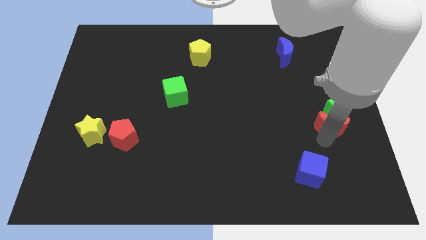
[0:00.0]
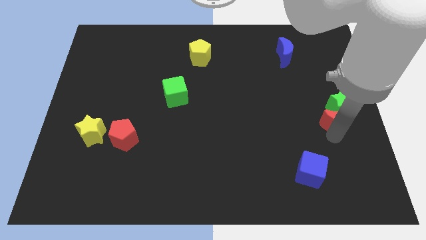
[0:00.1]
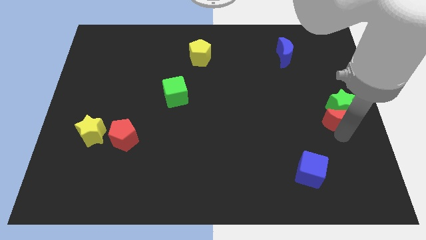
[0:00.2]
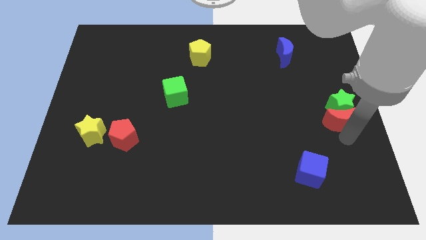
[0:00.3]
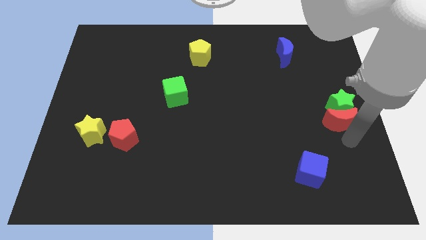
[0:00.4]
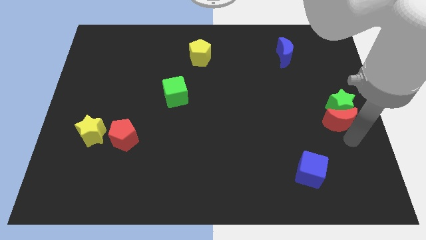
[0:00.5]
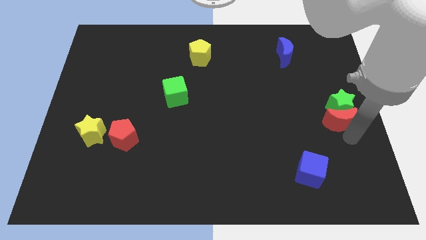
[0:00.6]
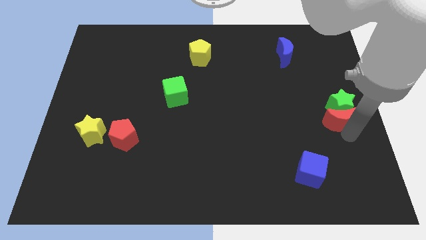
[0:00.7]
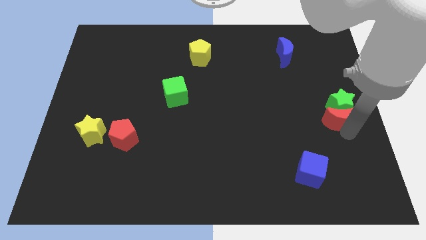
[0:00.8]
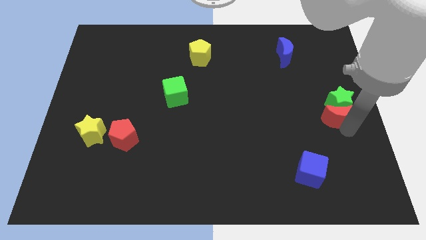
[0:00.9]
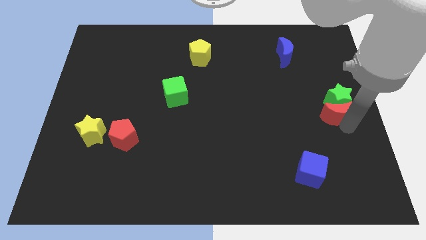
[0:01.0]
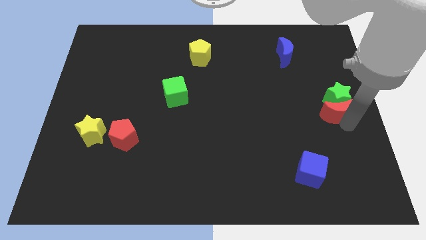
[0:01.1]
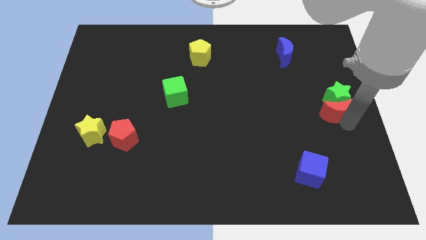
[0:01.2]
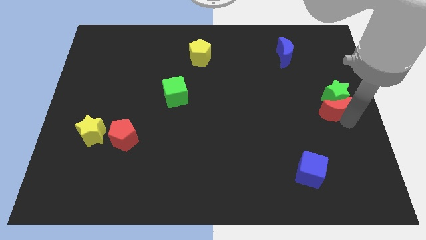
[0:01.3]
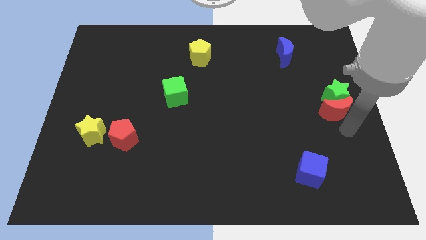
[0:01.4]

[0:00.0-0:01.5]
put the red crescent and green star at the center right of the table

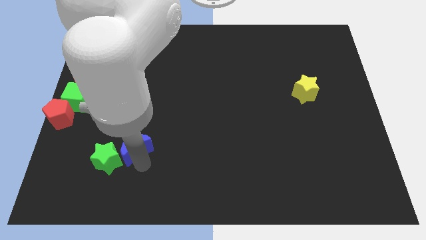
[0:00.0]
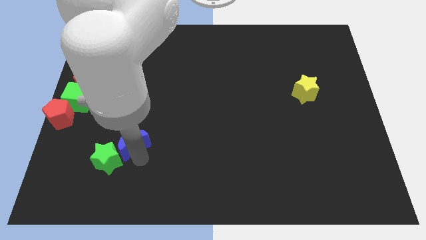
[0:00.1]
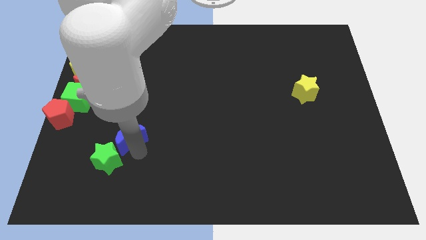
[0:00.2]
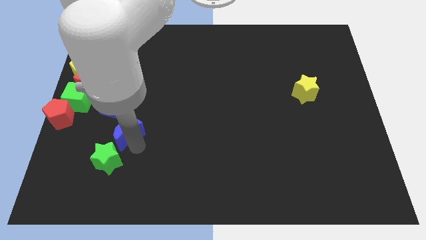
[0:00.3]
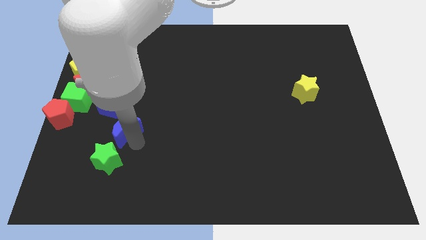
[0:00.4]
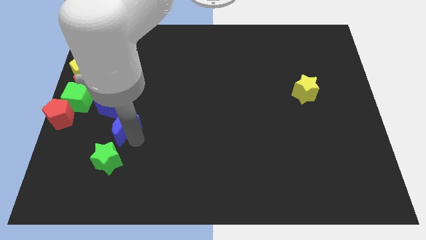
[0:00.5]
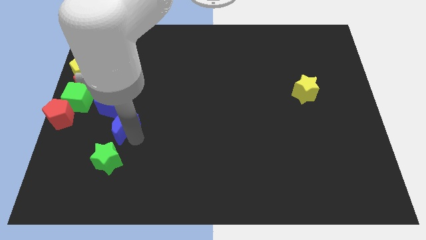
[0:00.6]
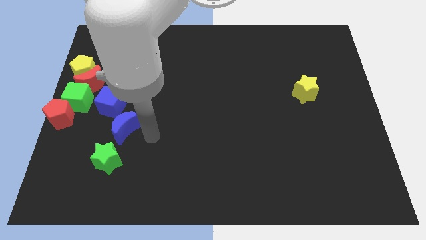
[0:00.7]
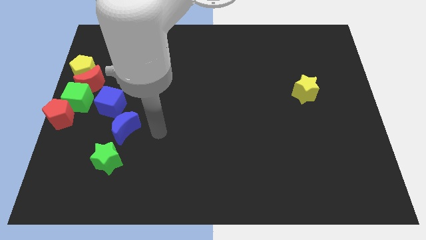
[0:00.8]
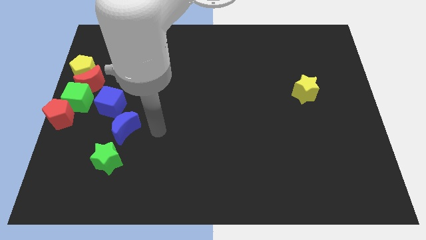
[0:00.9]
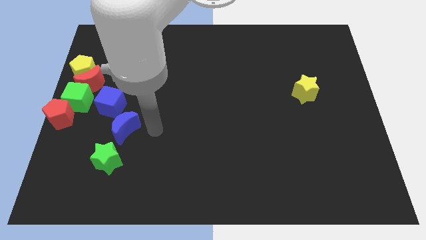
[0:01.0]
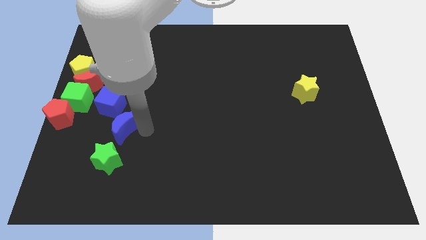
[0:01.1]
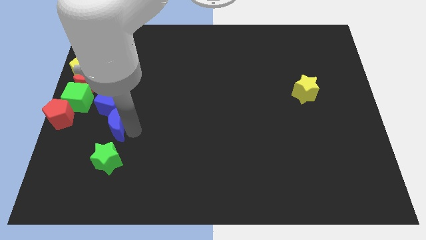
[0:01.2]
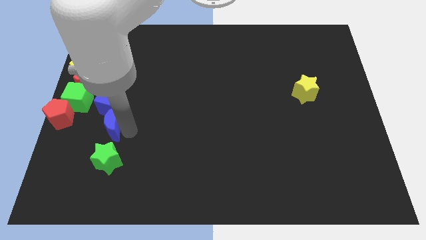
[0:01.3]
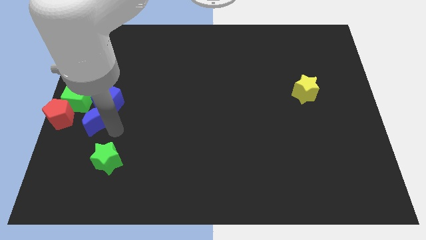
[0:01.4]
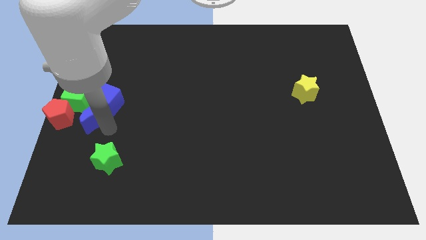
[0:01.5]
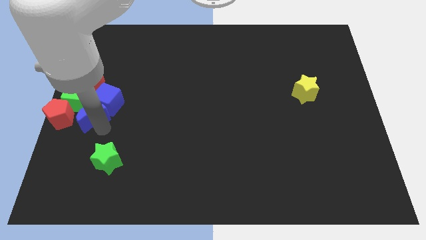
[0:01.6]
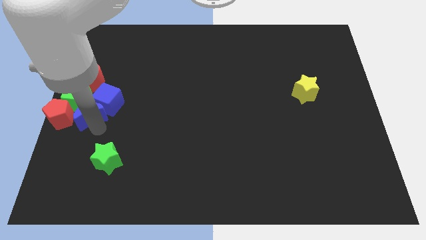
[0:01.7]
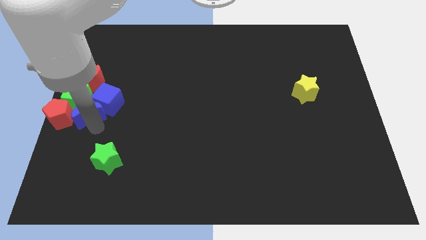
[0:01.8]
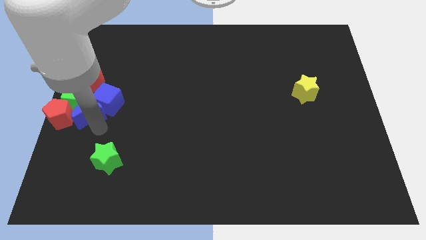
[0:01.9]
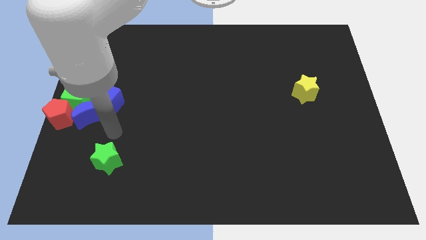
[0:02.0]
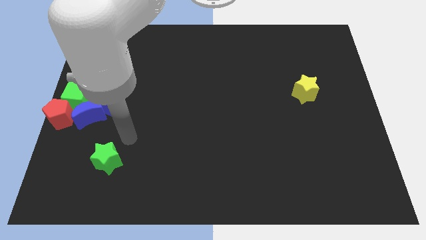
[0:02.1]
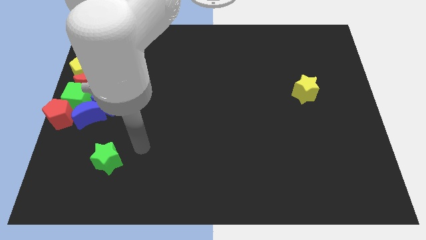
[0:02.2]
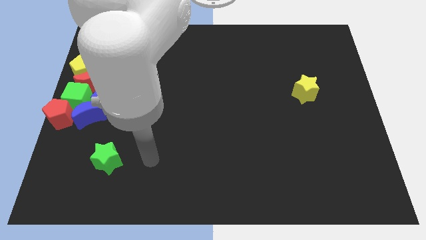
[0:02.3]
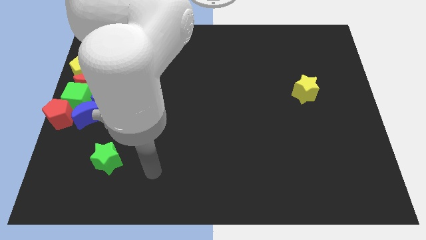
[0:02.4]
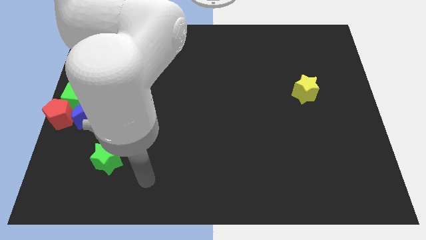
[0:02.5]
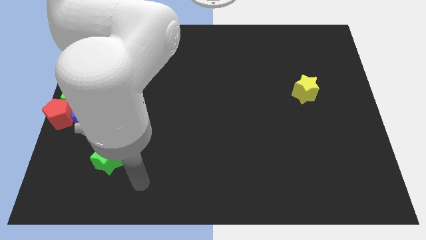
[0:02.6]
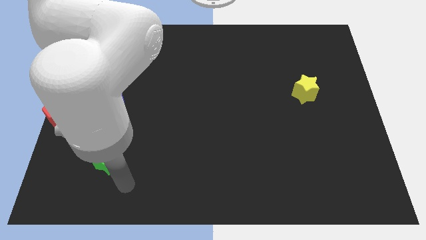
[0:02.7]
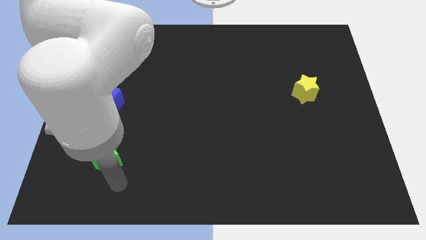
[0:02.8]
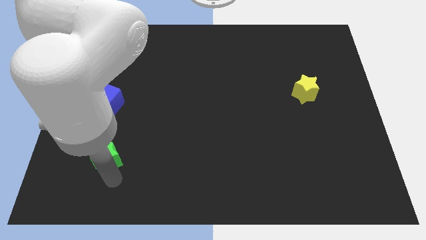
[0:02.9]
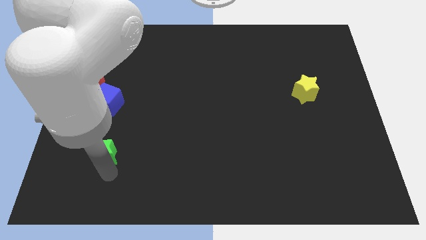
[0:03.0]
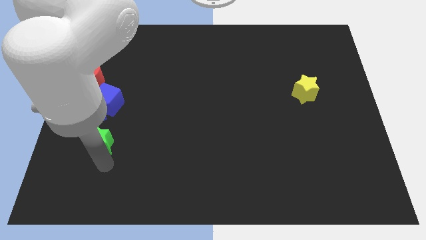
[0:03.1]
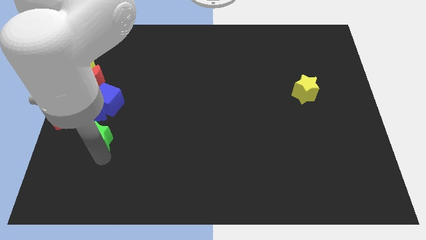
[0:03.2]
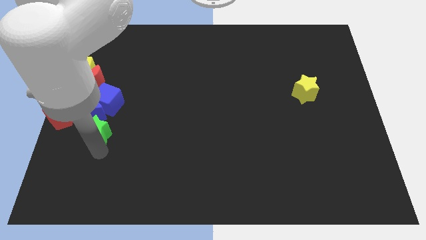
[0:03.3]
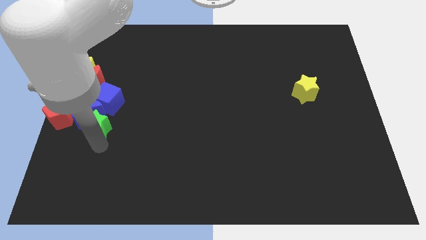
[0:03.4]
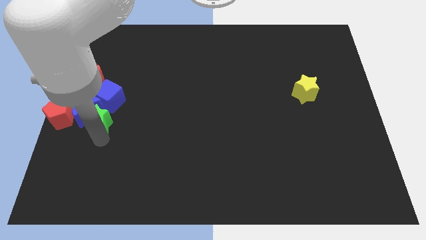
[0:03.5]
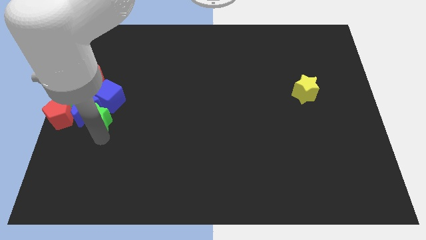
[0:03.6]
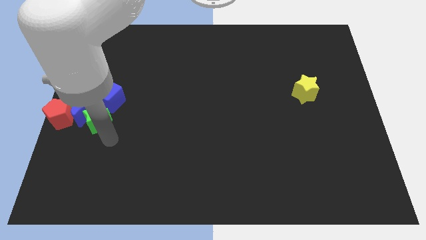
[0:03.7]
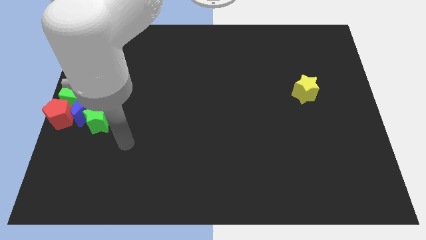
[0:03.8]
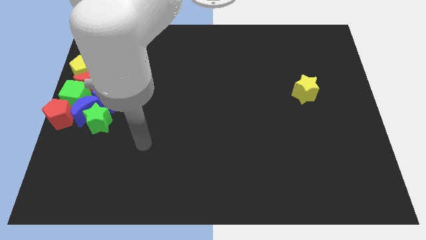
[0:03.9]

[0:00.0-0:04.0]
push the green star into the blue moon

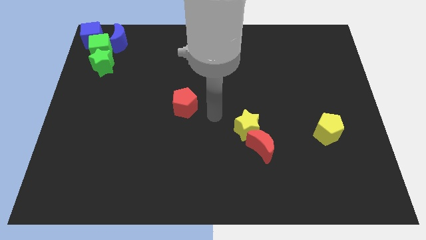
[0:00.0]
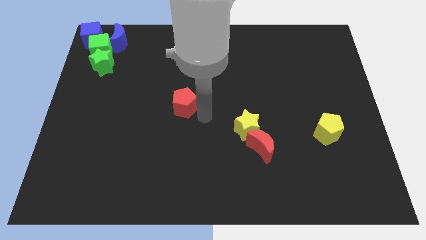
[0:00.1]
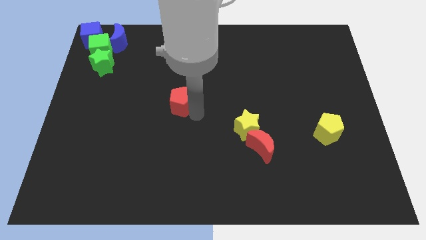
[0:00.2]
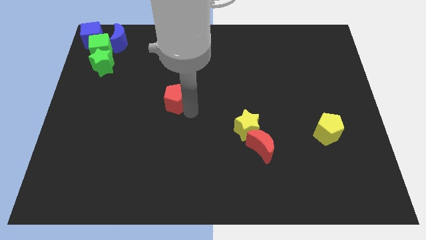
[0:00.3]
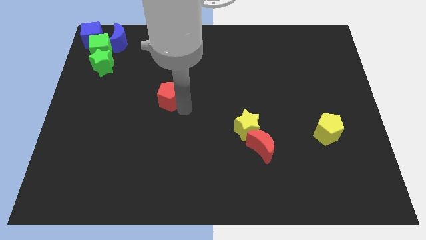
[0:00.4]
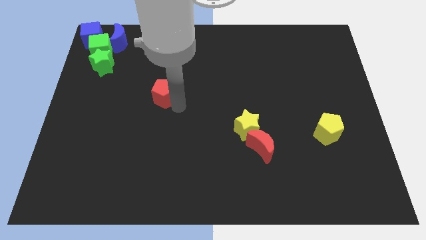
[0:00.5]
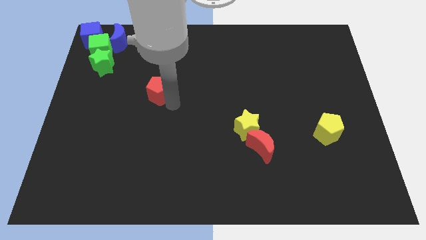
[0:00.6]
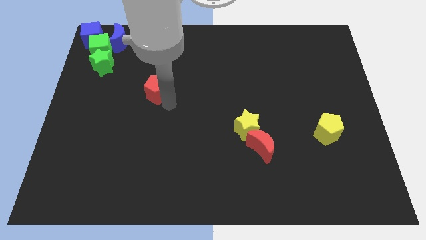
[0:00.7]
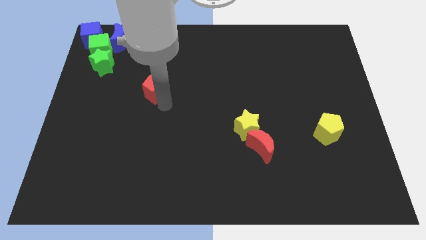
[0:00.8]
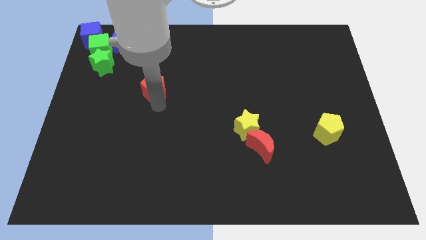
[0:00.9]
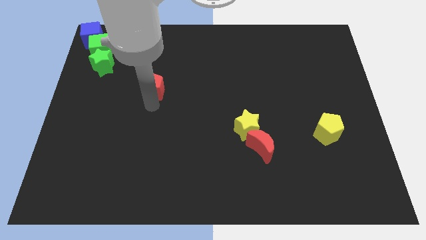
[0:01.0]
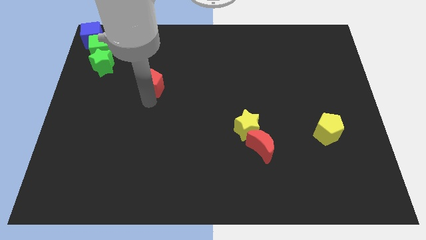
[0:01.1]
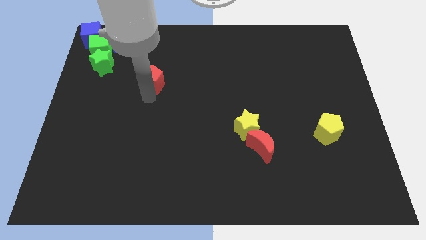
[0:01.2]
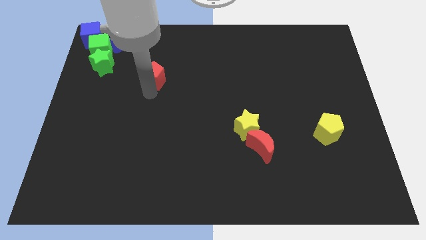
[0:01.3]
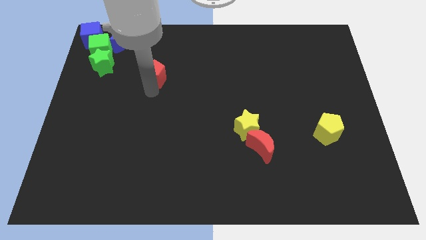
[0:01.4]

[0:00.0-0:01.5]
push the red pentagon slightly to the top left of the board

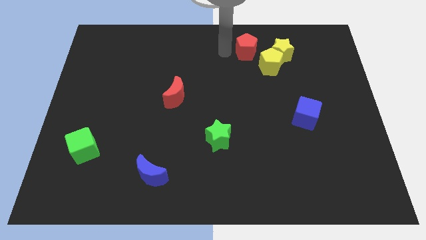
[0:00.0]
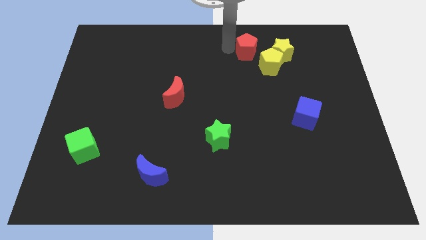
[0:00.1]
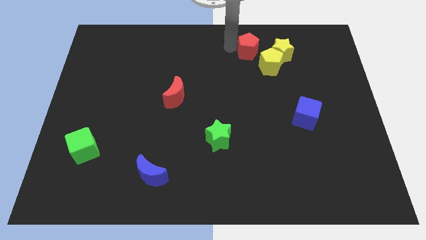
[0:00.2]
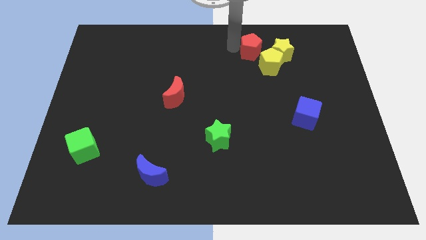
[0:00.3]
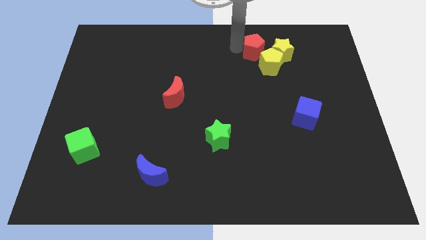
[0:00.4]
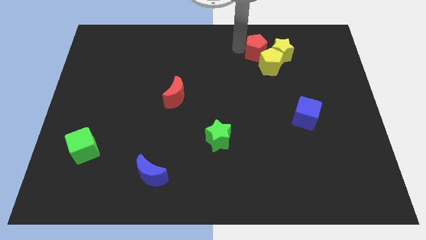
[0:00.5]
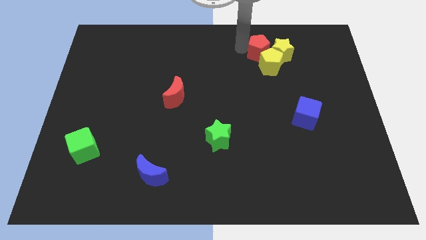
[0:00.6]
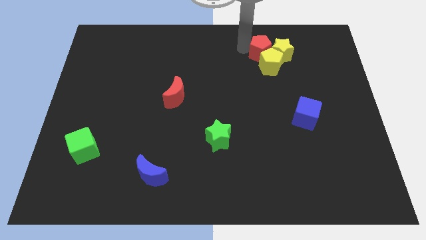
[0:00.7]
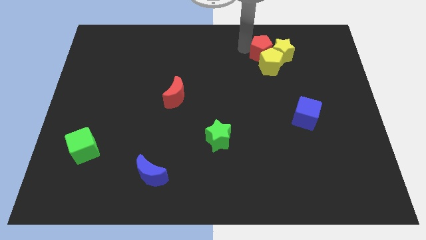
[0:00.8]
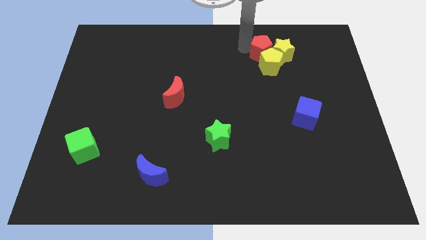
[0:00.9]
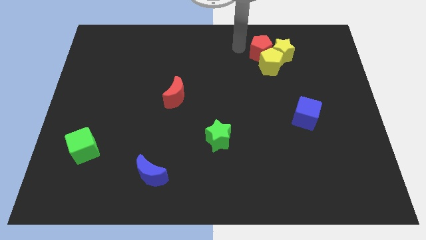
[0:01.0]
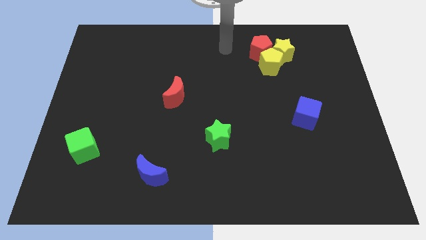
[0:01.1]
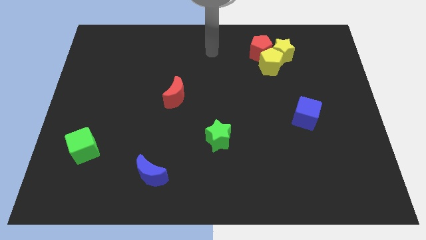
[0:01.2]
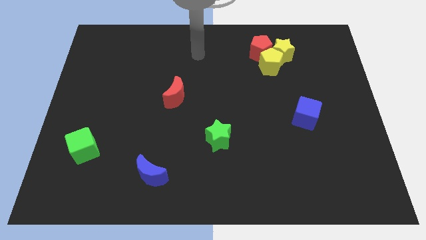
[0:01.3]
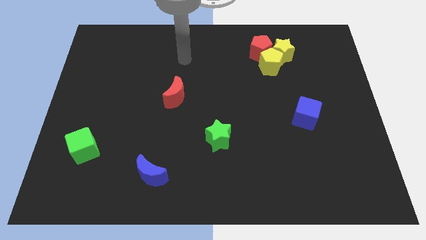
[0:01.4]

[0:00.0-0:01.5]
push the red pentagon into the yellow blocks

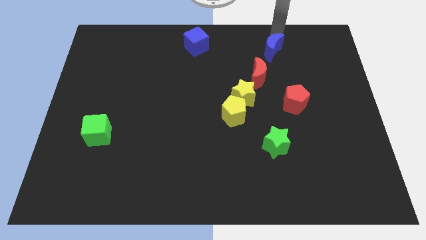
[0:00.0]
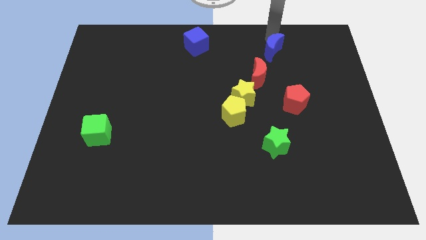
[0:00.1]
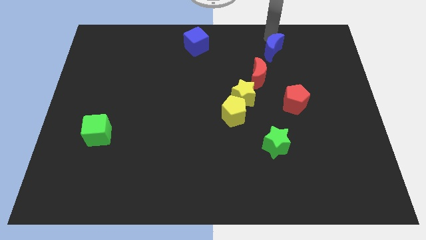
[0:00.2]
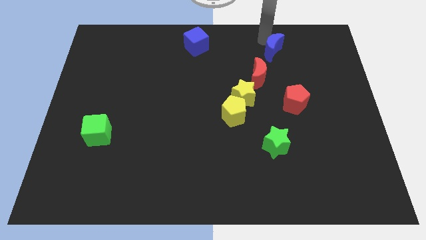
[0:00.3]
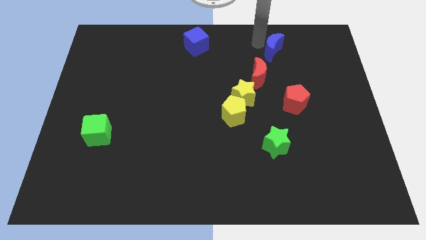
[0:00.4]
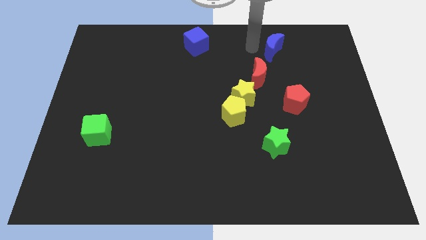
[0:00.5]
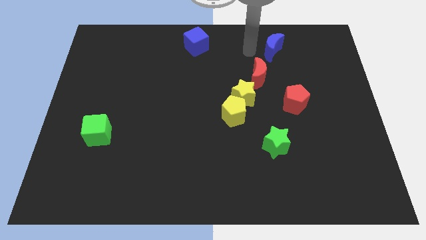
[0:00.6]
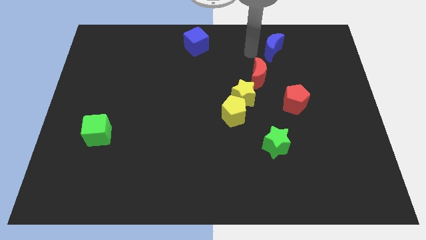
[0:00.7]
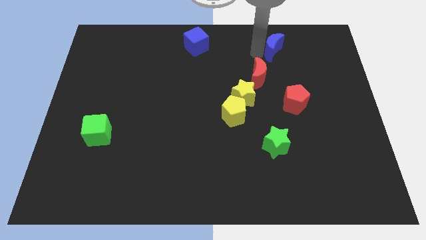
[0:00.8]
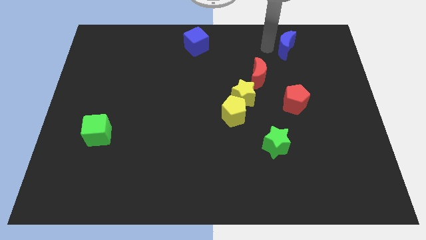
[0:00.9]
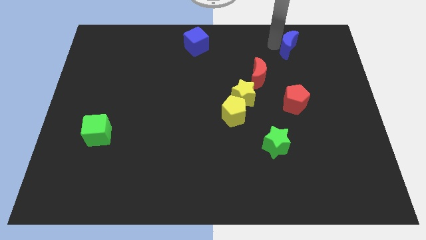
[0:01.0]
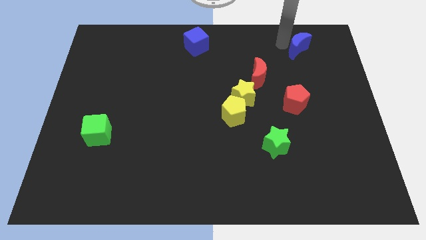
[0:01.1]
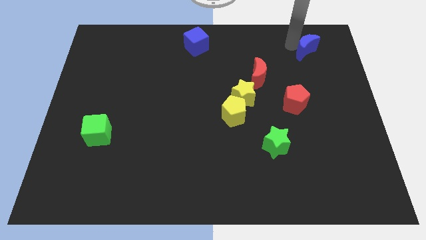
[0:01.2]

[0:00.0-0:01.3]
move the blue moon vertically at the top side of the red pentagon
